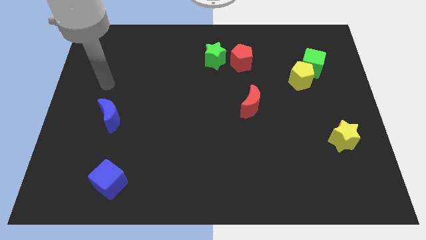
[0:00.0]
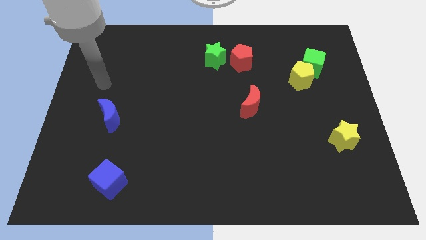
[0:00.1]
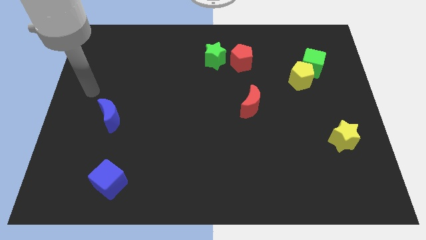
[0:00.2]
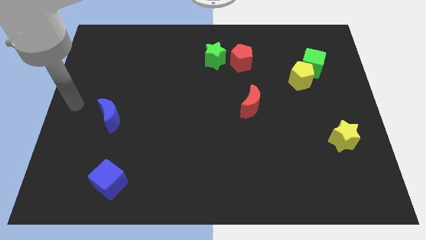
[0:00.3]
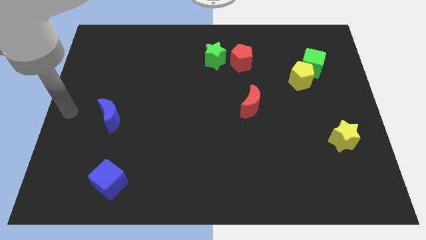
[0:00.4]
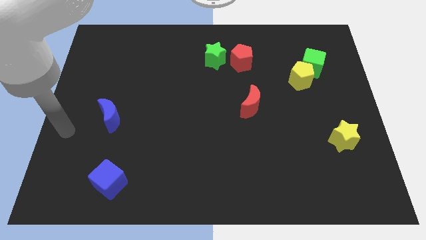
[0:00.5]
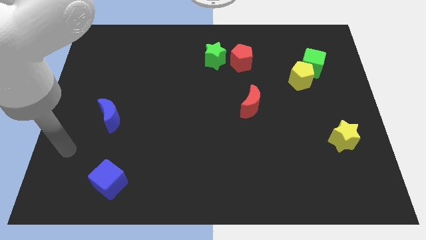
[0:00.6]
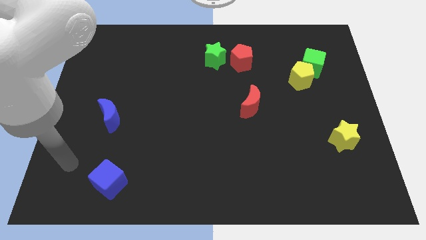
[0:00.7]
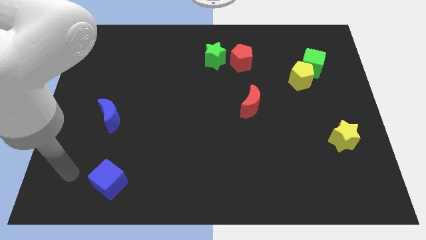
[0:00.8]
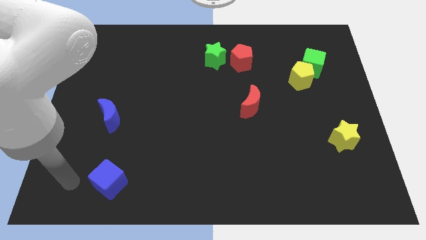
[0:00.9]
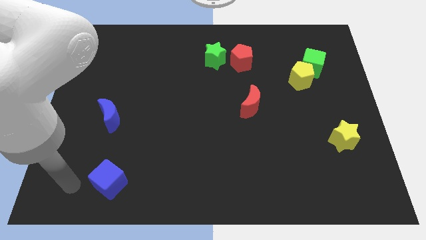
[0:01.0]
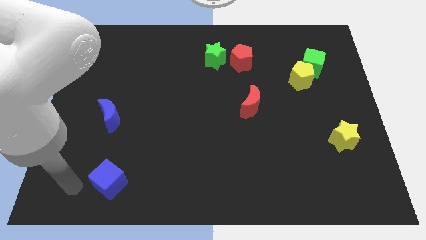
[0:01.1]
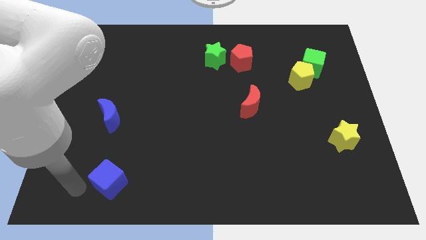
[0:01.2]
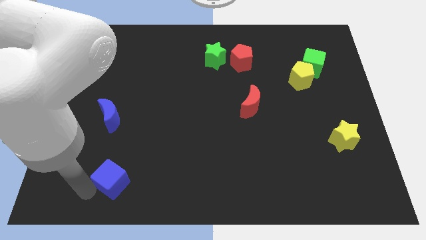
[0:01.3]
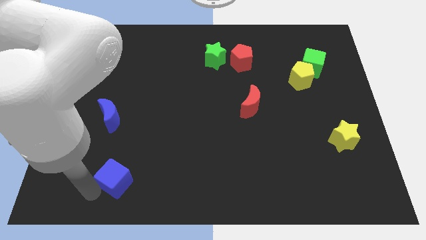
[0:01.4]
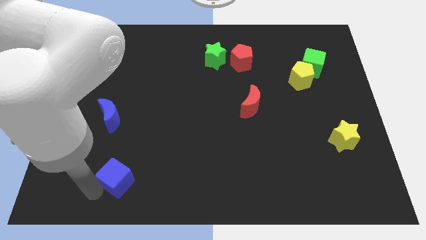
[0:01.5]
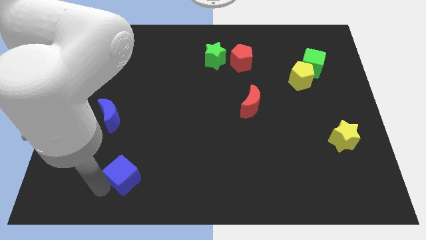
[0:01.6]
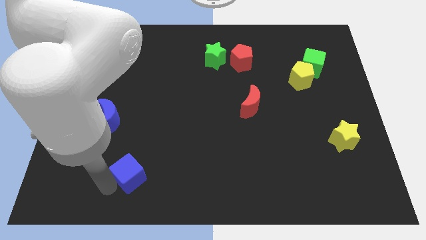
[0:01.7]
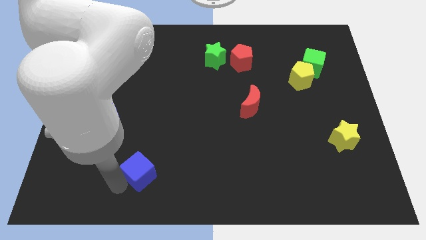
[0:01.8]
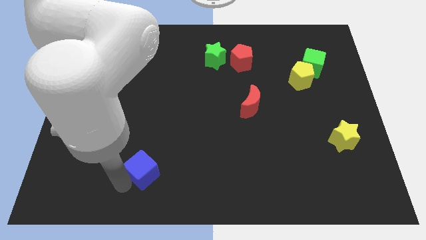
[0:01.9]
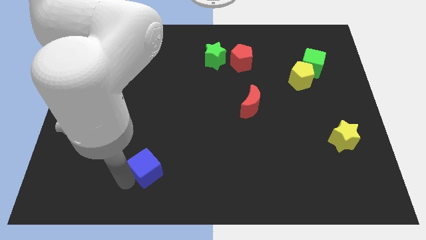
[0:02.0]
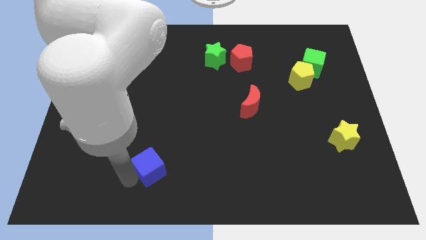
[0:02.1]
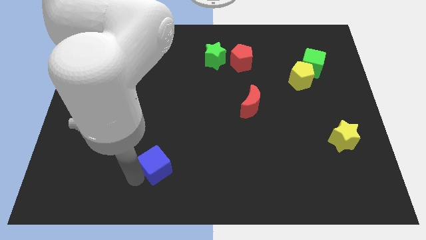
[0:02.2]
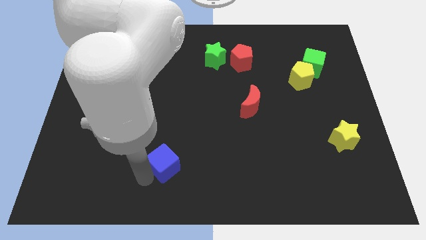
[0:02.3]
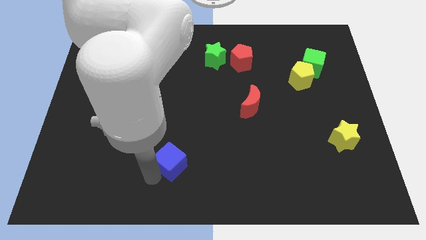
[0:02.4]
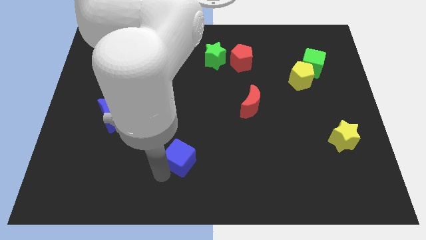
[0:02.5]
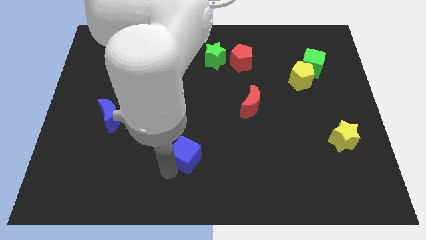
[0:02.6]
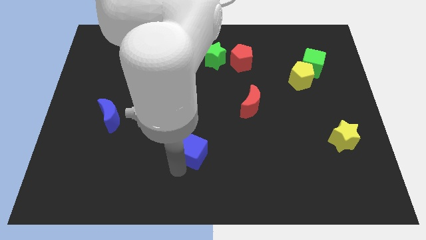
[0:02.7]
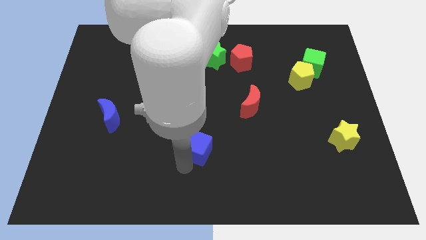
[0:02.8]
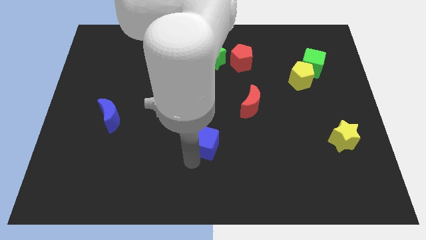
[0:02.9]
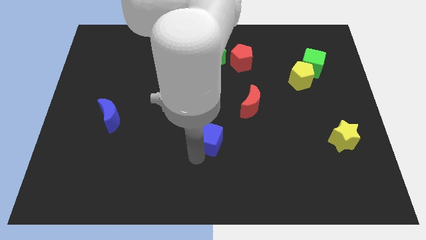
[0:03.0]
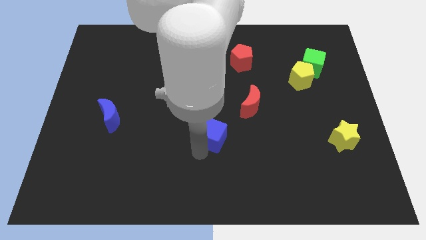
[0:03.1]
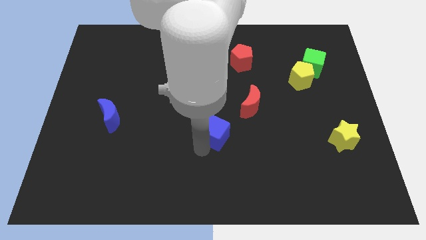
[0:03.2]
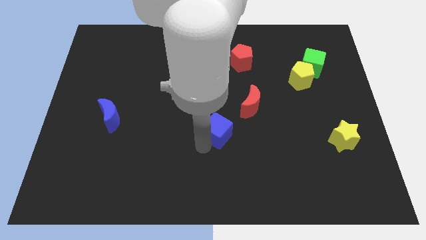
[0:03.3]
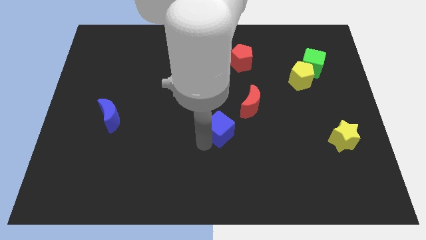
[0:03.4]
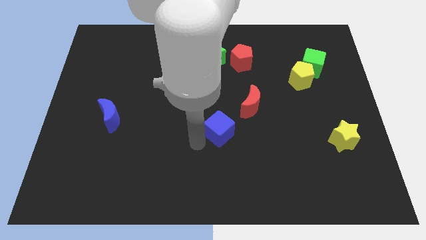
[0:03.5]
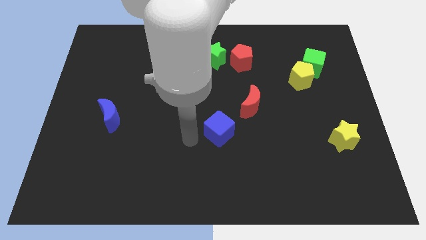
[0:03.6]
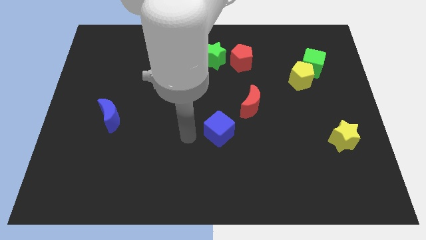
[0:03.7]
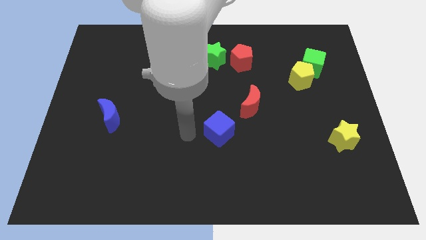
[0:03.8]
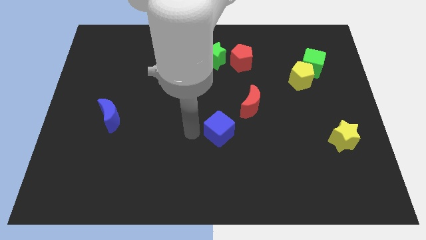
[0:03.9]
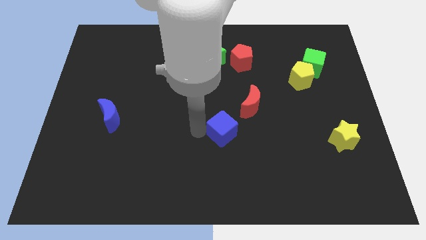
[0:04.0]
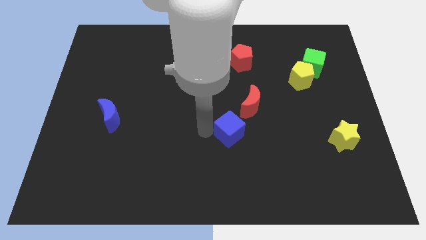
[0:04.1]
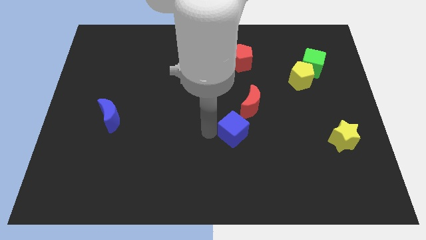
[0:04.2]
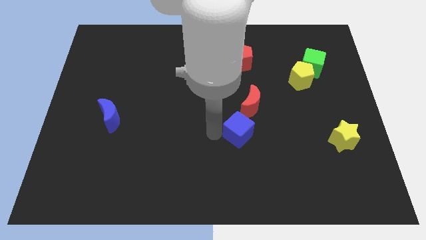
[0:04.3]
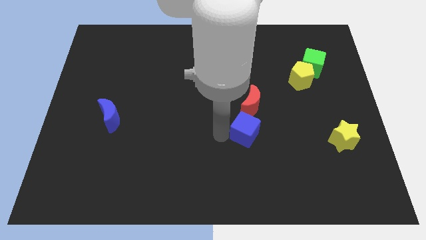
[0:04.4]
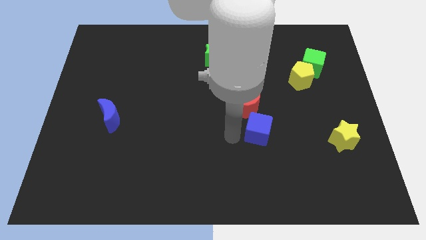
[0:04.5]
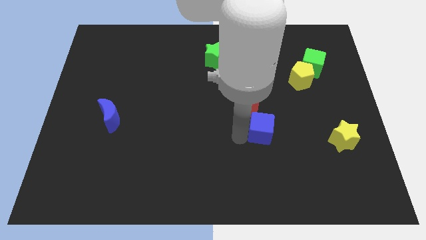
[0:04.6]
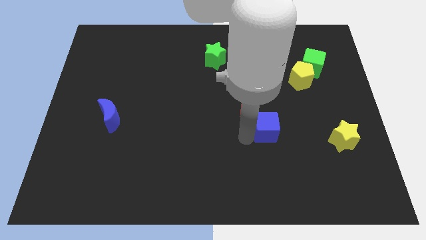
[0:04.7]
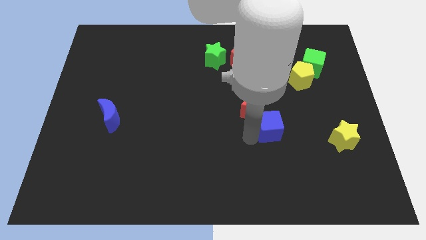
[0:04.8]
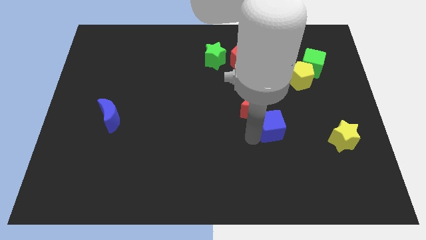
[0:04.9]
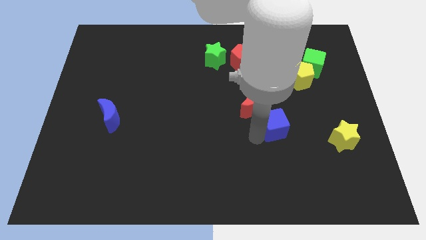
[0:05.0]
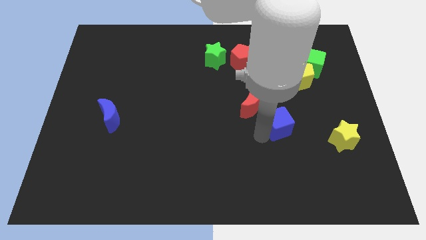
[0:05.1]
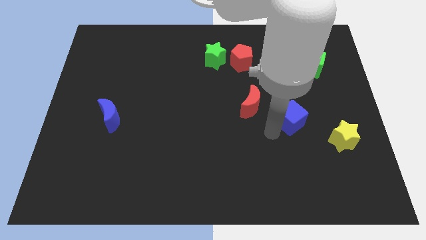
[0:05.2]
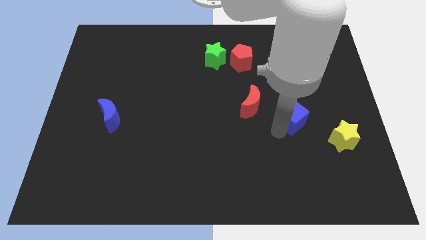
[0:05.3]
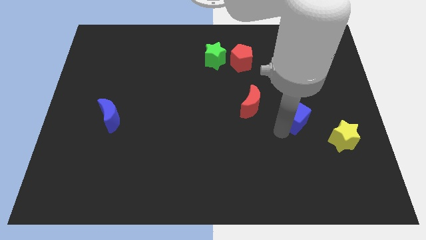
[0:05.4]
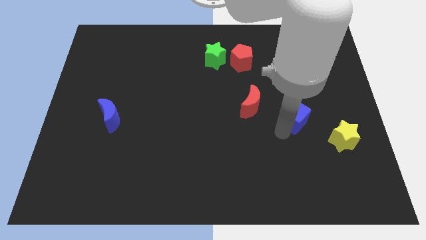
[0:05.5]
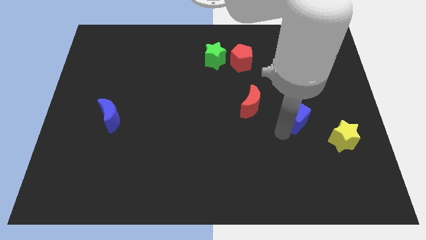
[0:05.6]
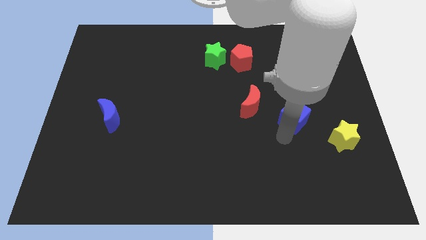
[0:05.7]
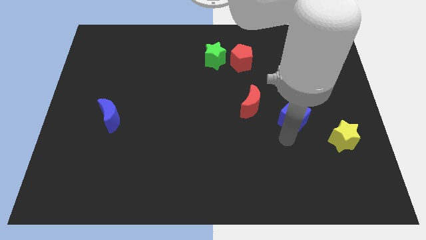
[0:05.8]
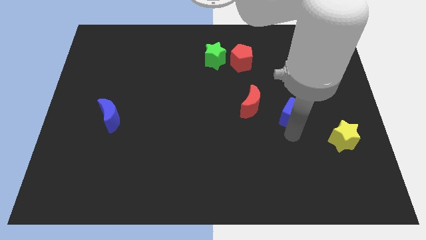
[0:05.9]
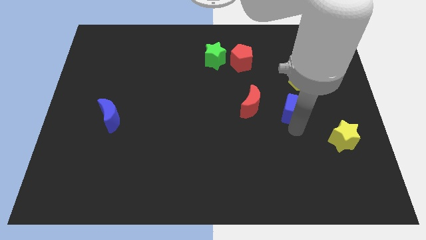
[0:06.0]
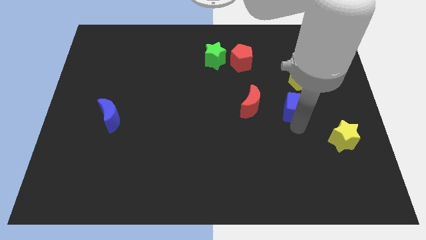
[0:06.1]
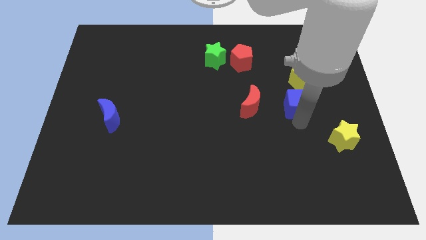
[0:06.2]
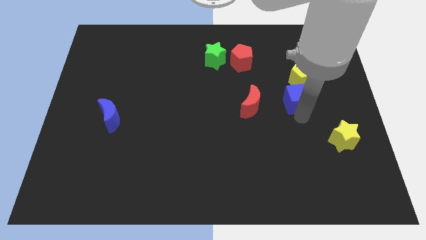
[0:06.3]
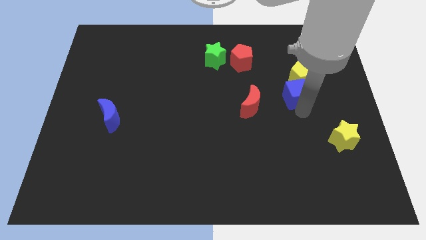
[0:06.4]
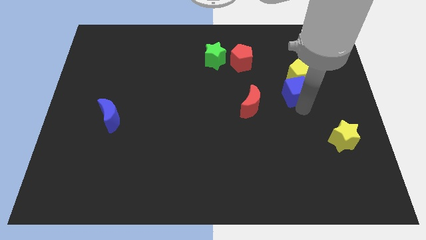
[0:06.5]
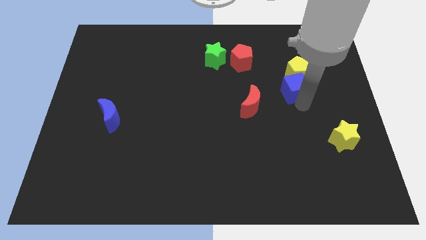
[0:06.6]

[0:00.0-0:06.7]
move the blue cube next to the yellow pentagon

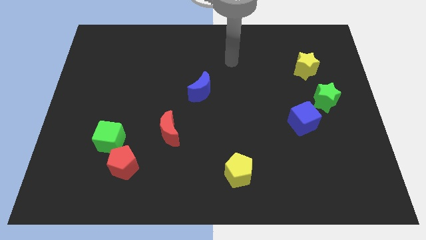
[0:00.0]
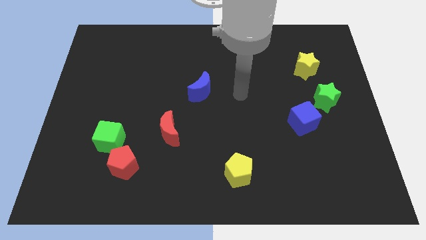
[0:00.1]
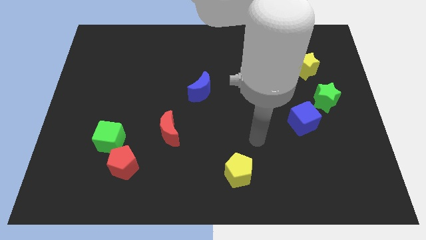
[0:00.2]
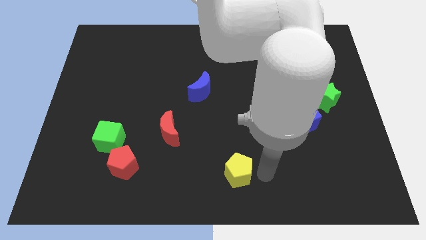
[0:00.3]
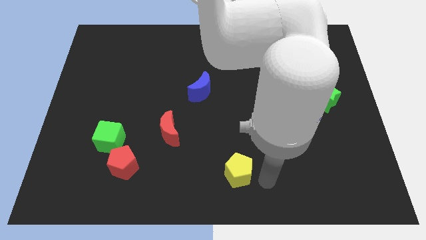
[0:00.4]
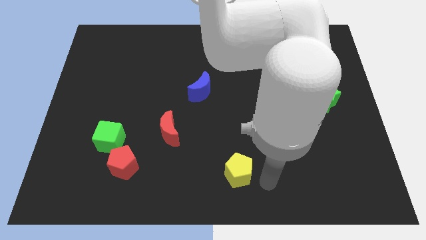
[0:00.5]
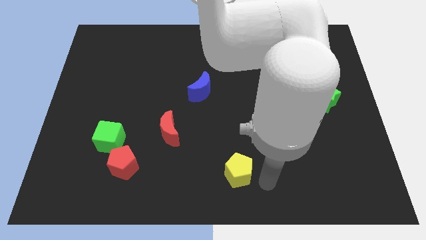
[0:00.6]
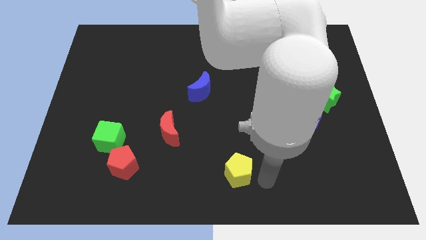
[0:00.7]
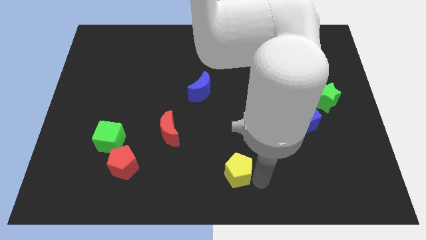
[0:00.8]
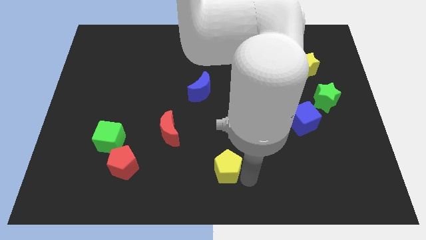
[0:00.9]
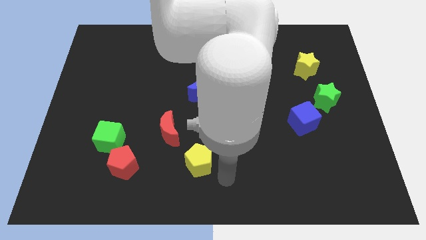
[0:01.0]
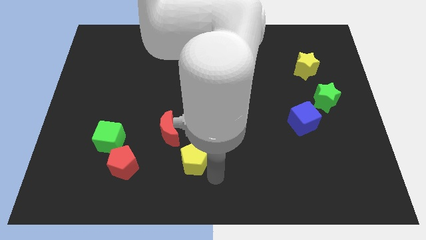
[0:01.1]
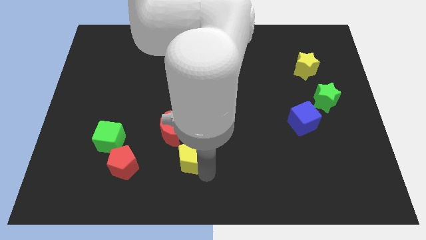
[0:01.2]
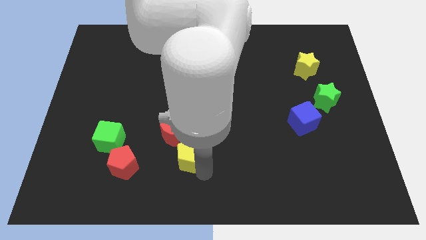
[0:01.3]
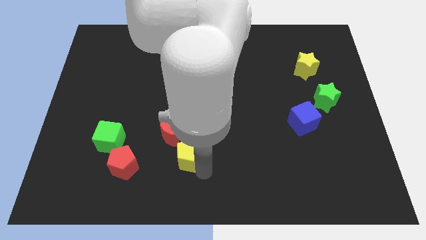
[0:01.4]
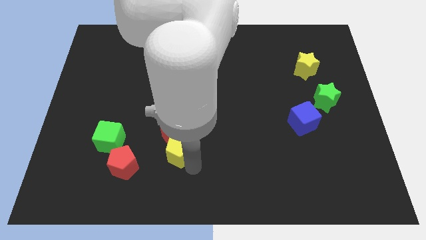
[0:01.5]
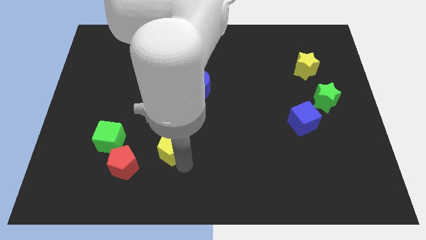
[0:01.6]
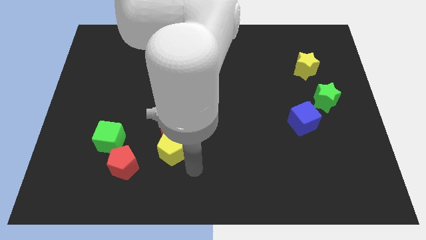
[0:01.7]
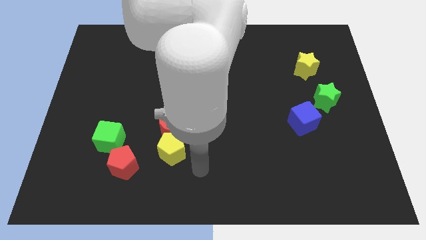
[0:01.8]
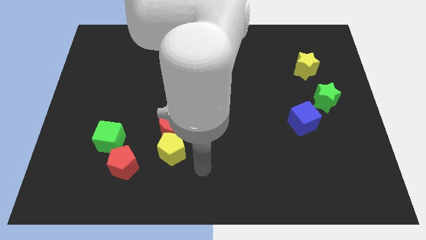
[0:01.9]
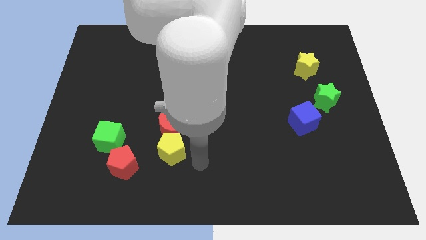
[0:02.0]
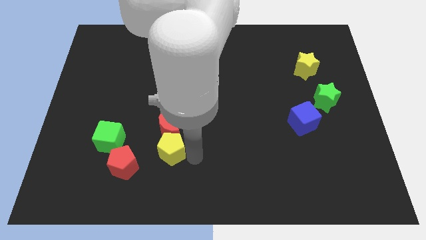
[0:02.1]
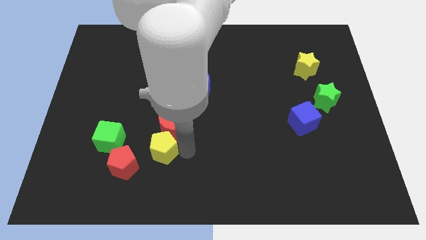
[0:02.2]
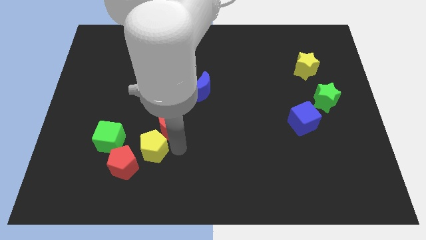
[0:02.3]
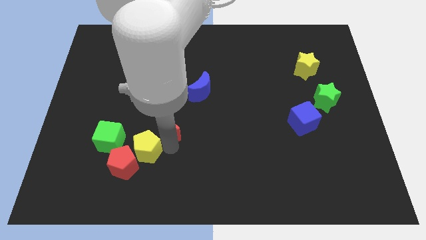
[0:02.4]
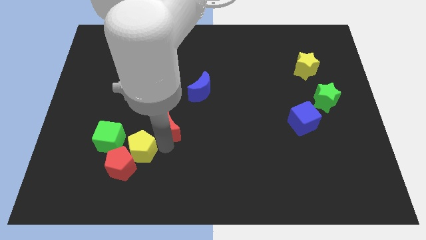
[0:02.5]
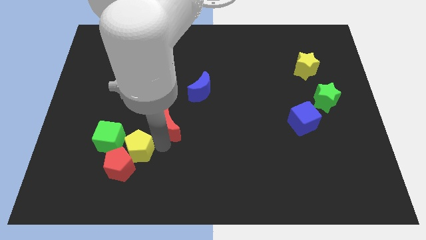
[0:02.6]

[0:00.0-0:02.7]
push the yellow pentagon next to the red pentagon
